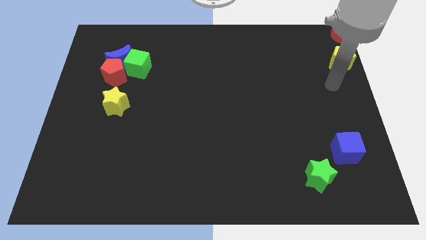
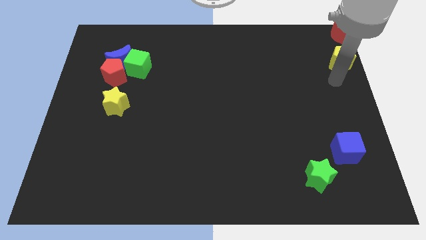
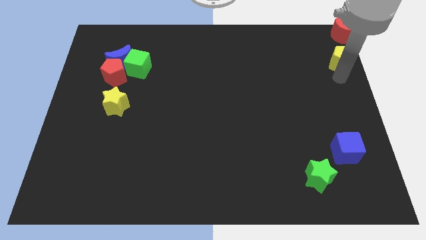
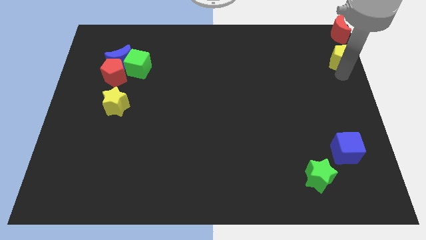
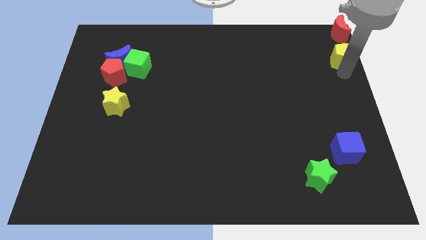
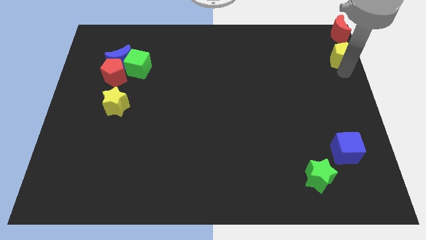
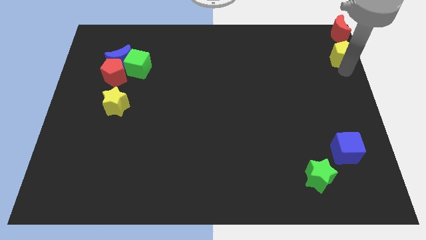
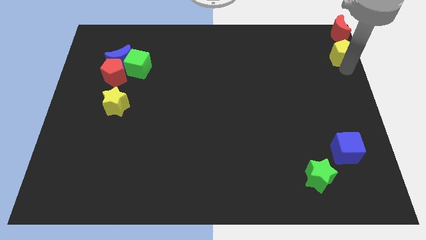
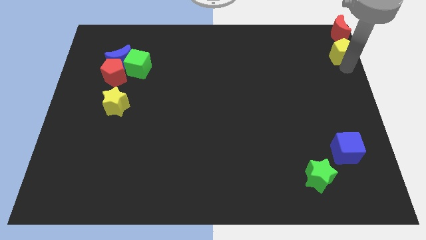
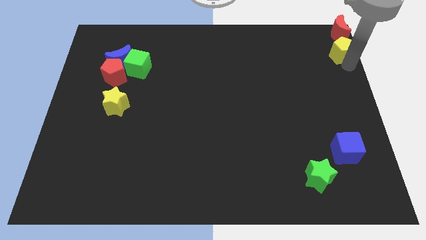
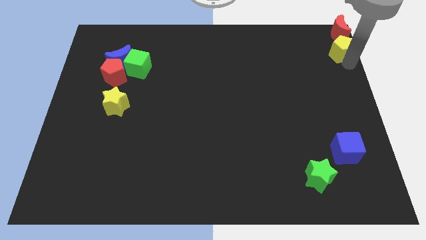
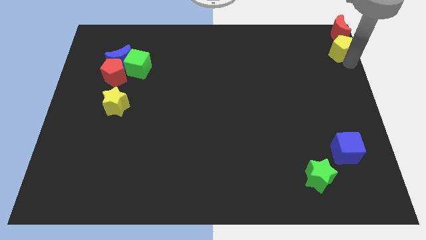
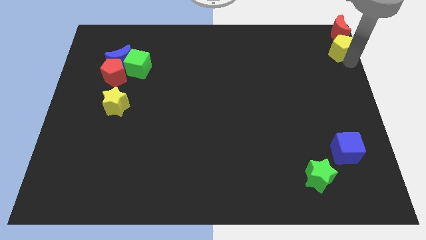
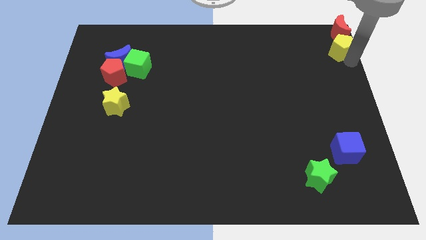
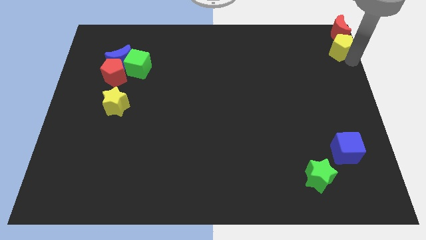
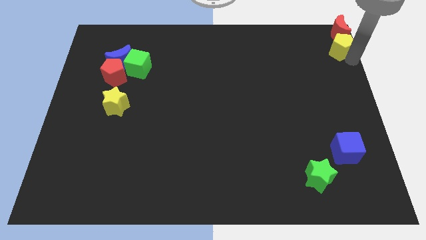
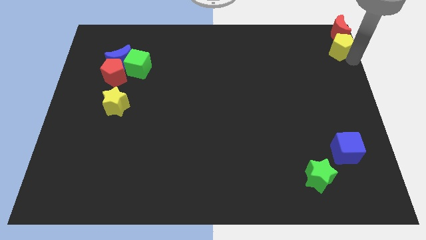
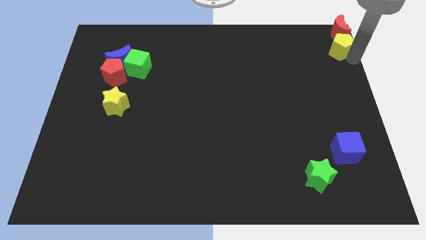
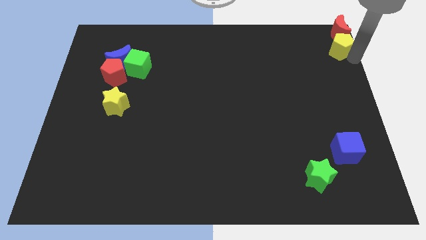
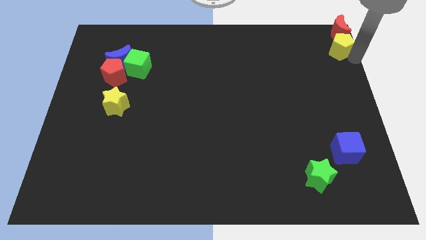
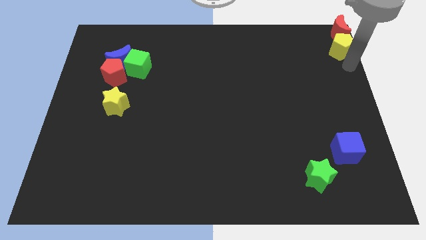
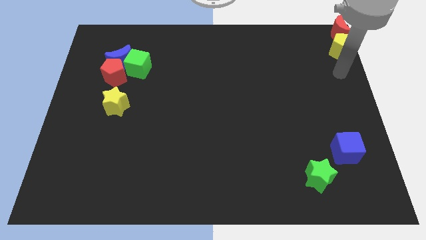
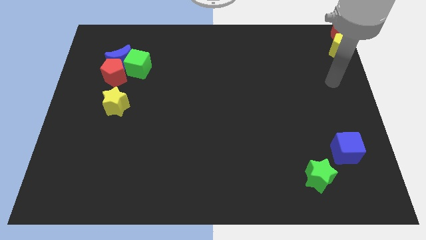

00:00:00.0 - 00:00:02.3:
push the yellow pentagon to the top right corner

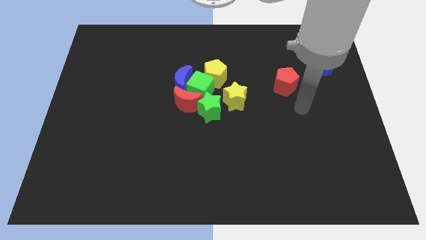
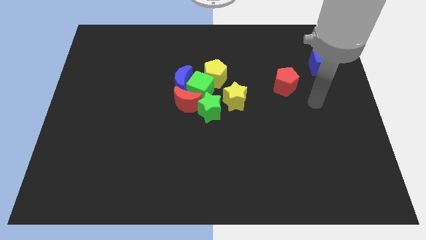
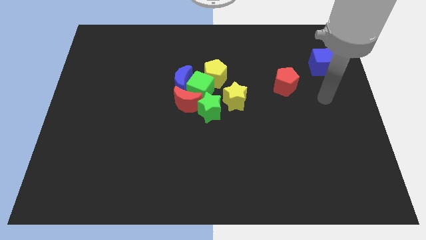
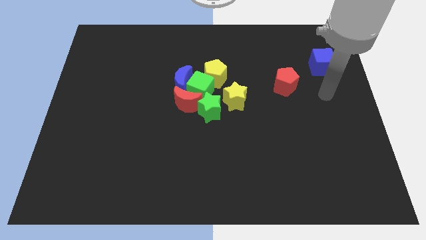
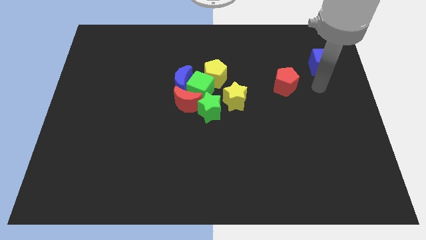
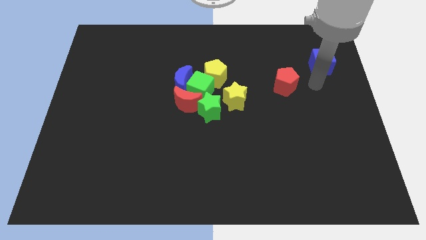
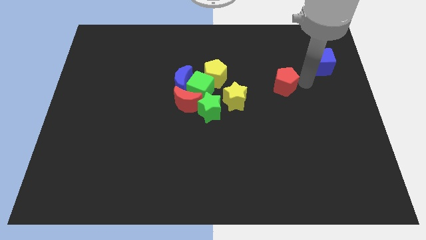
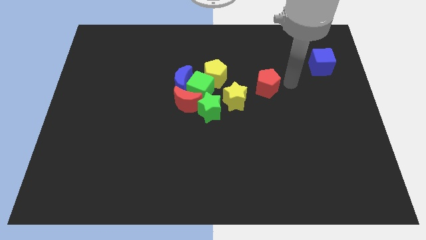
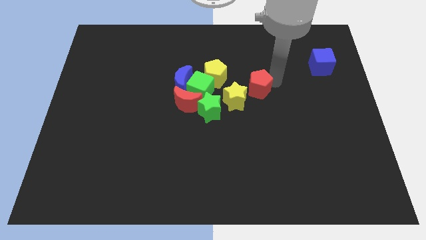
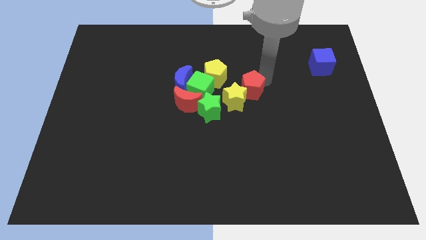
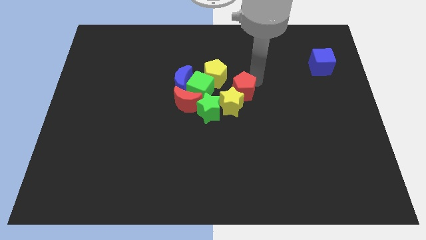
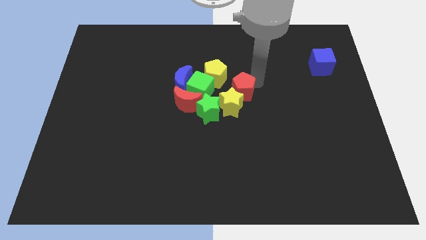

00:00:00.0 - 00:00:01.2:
push the red pentagon into the yellow star

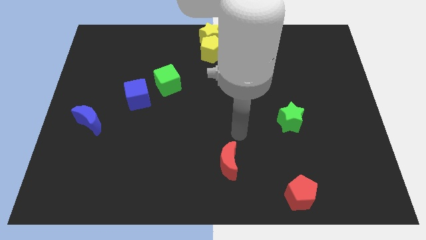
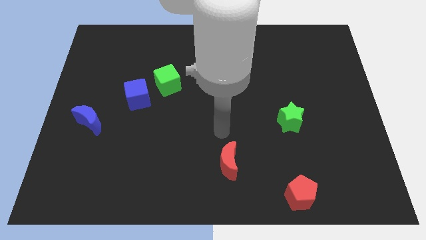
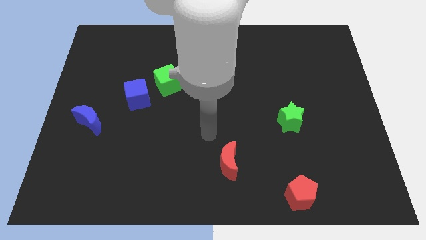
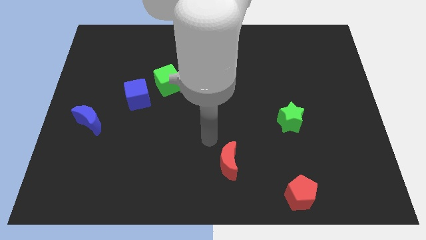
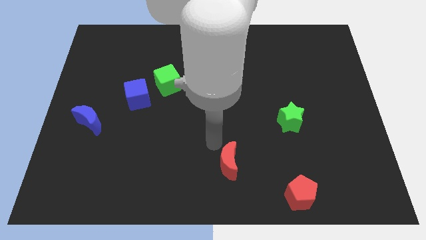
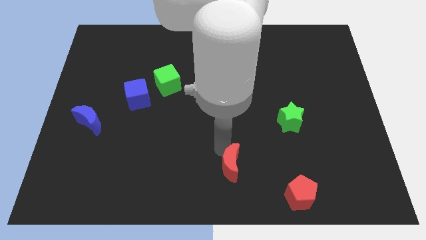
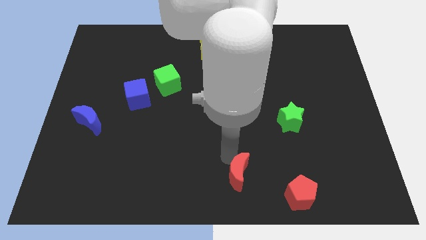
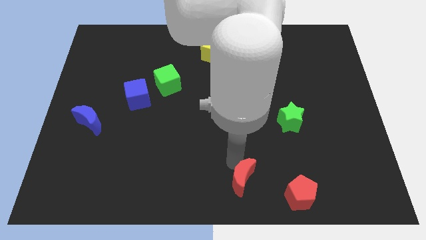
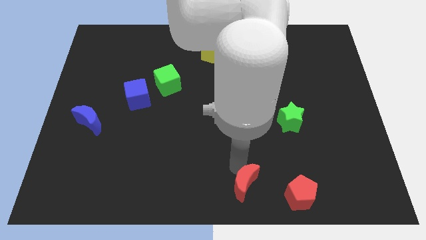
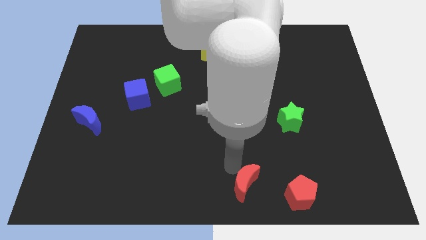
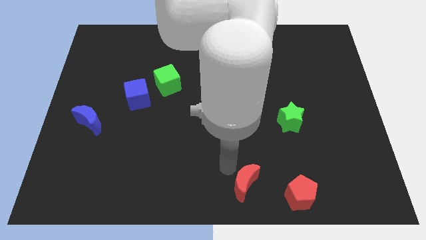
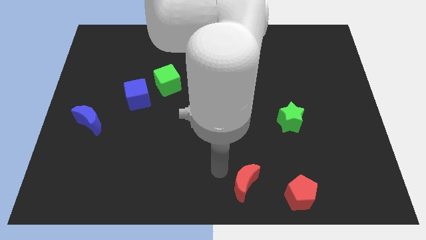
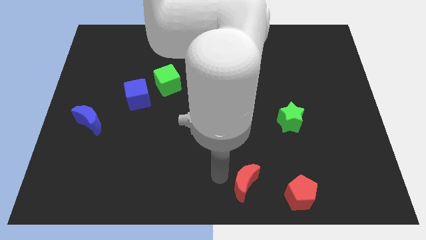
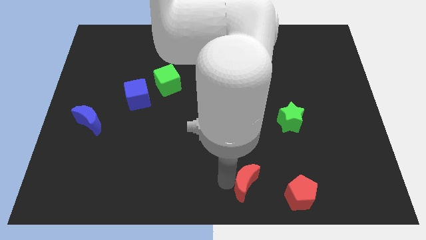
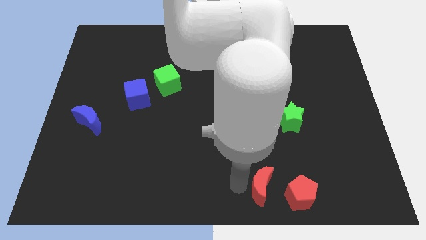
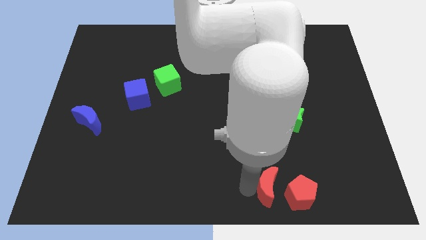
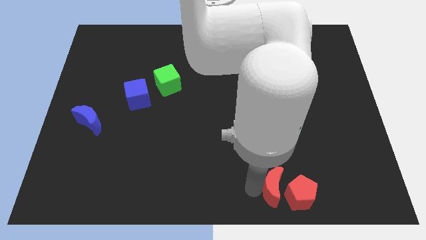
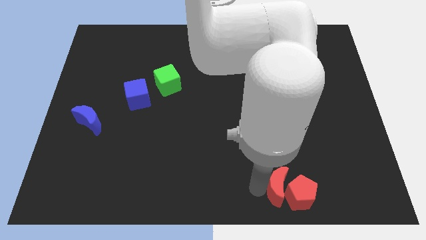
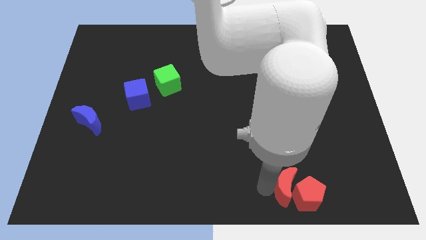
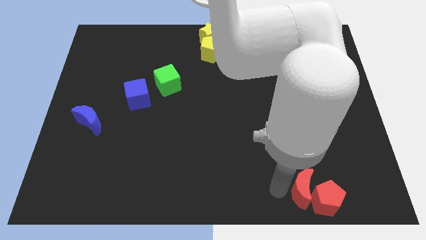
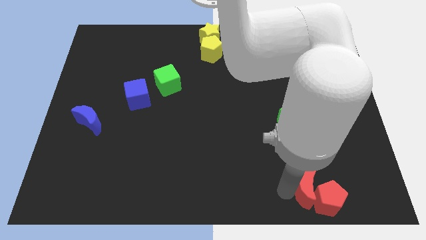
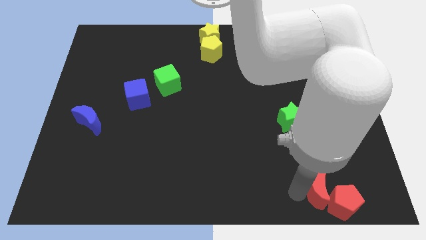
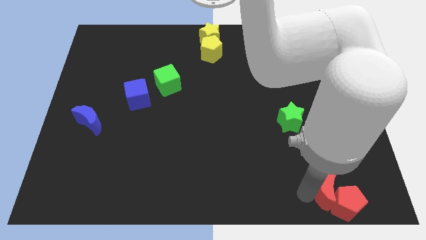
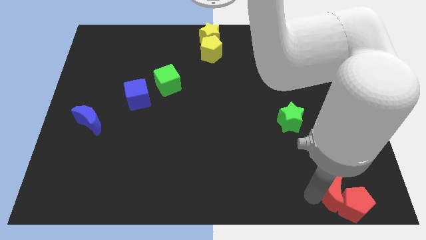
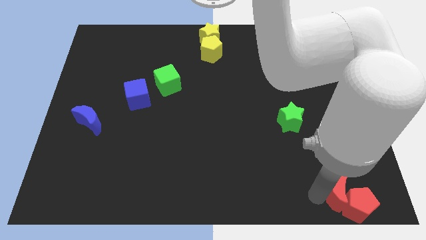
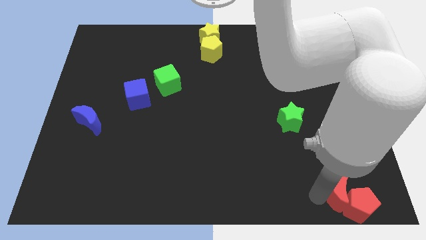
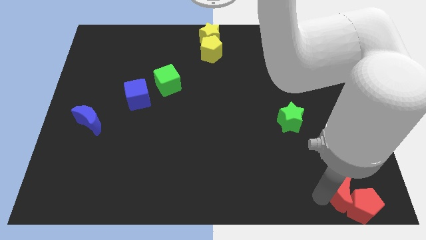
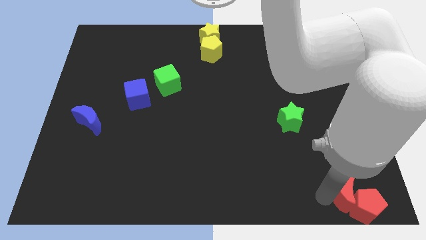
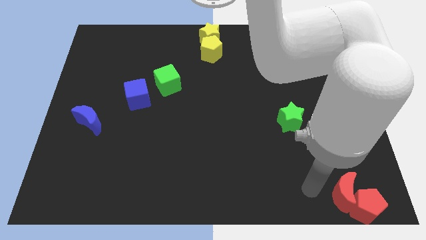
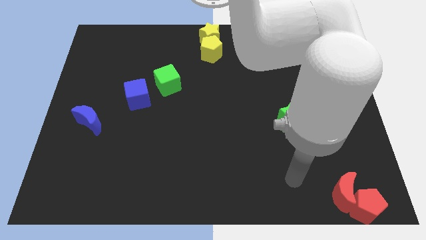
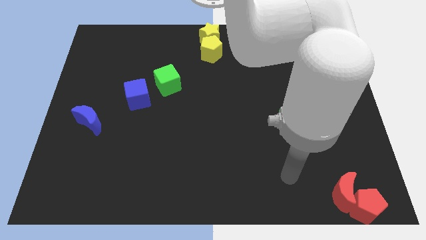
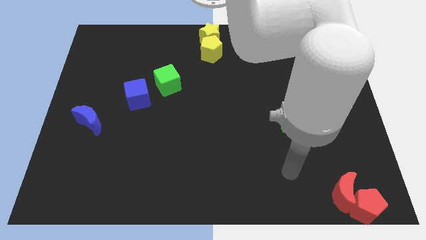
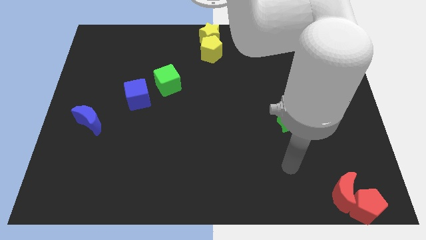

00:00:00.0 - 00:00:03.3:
move the red crescent and red pentagon to the right center of the board

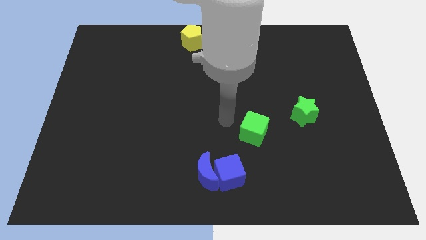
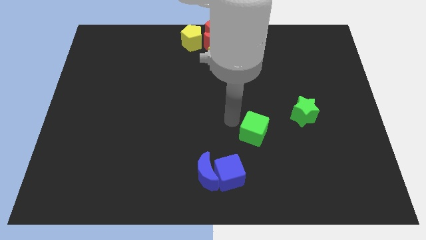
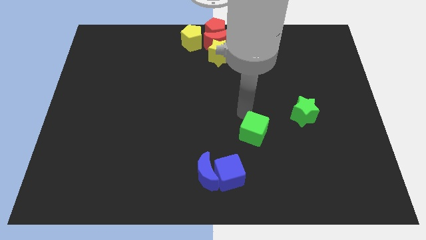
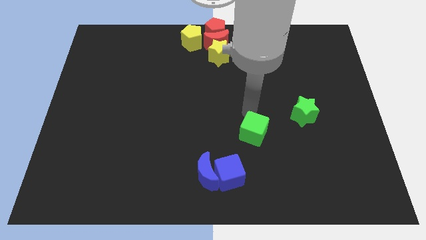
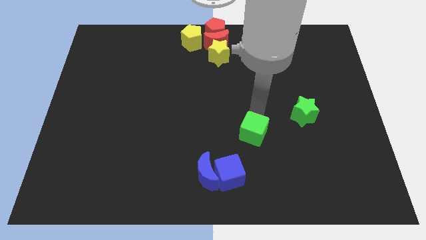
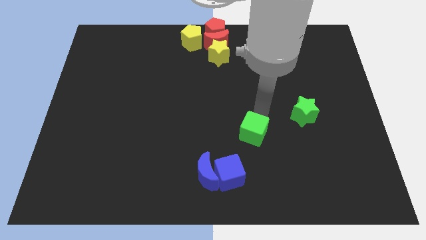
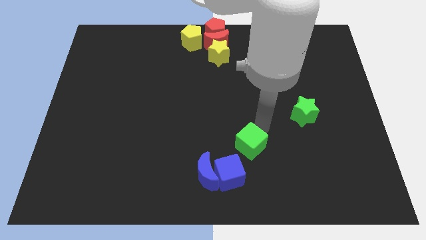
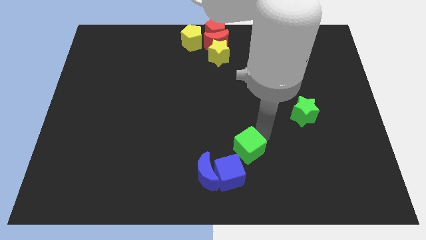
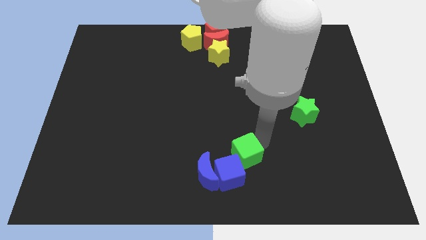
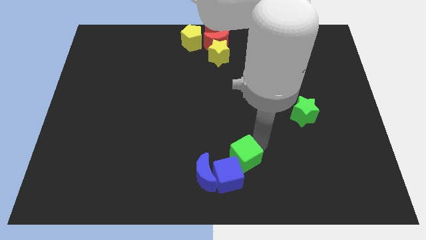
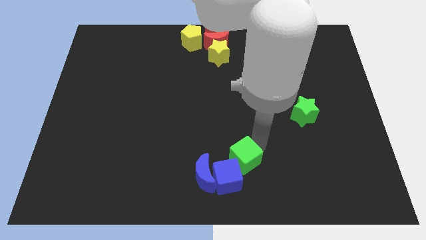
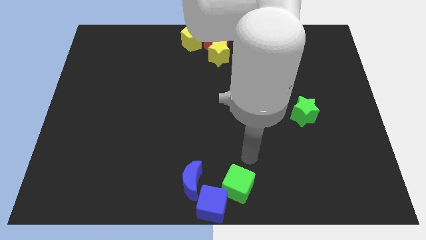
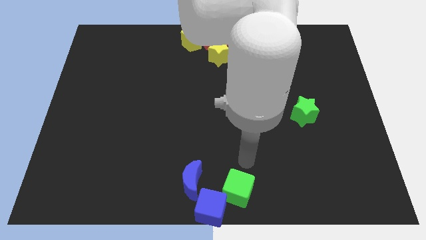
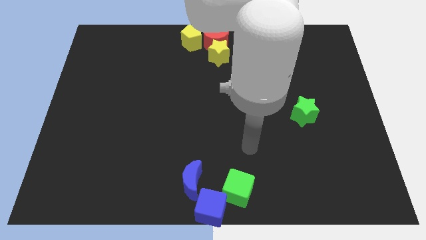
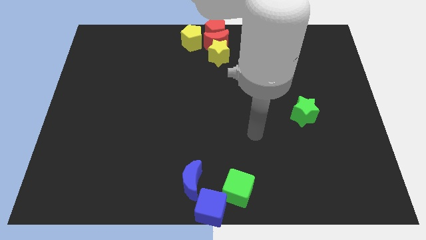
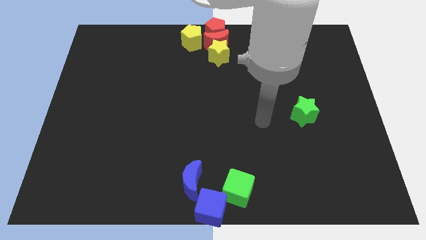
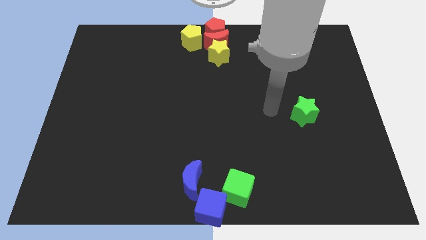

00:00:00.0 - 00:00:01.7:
move green cube into the blue cube

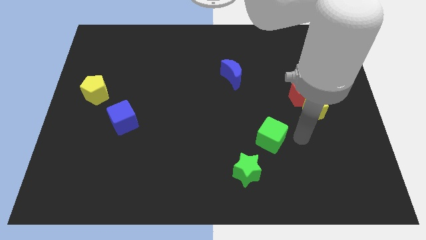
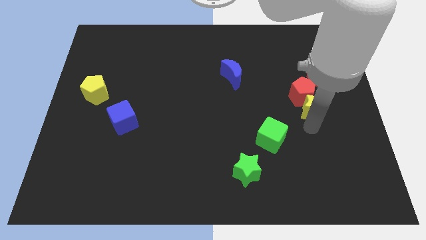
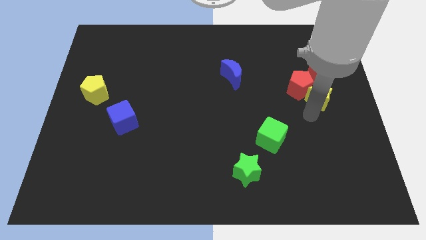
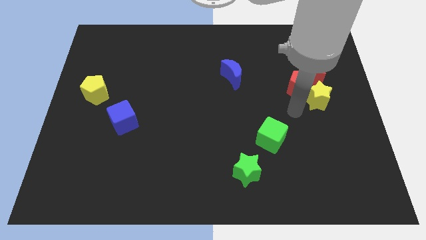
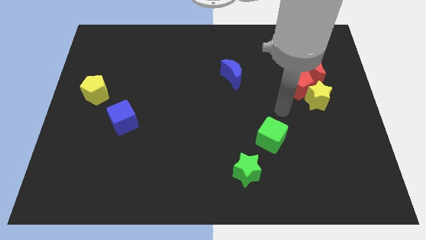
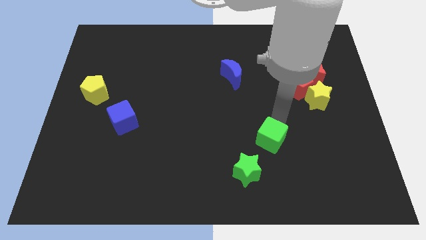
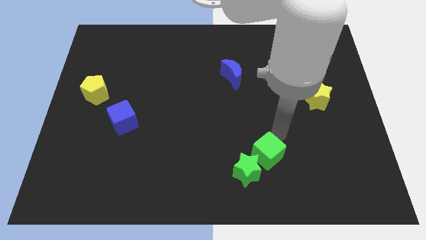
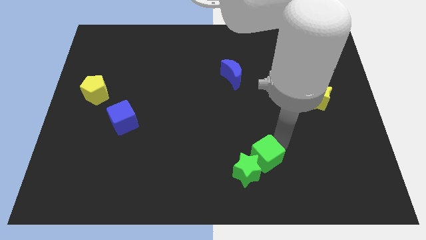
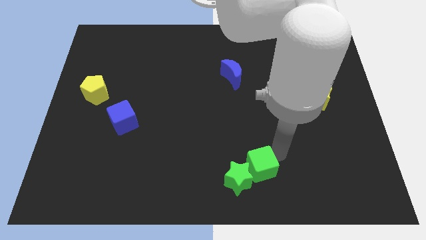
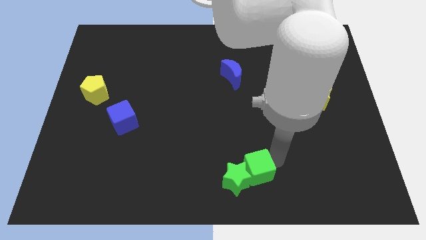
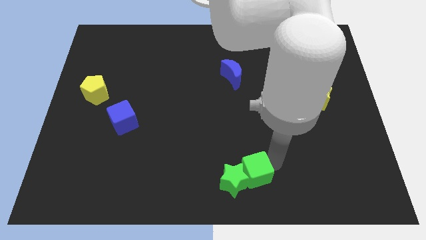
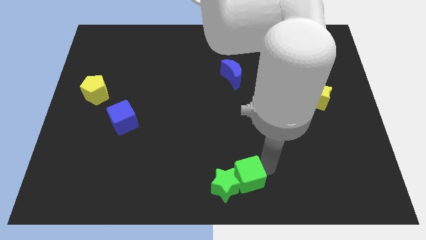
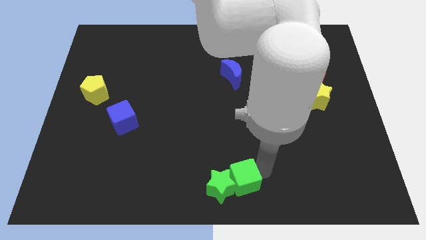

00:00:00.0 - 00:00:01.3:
move green cube to the bottom of the blue crescent
